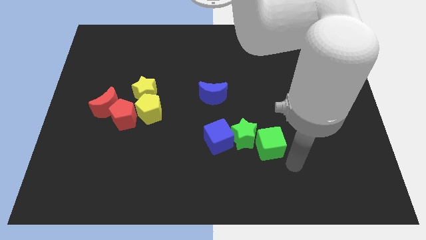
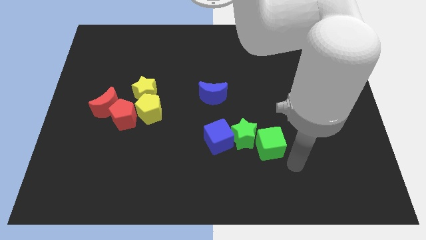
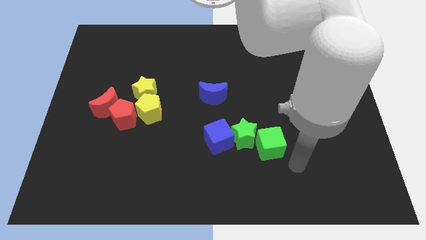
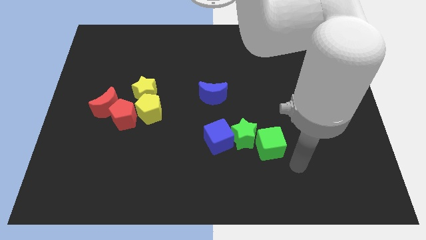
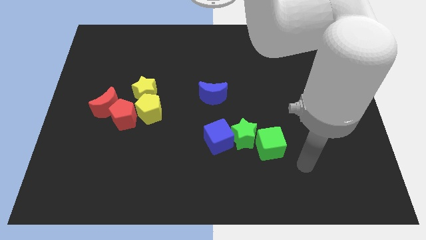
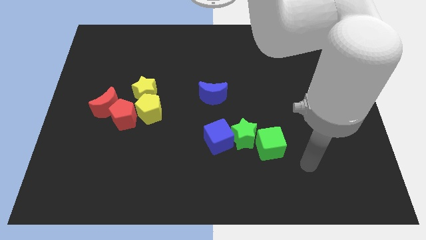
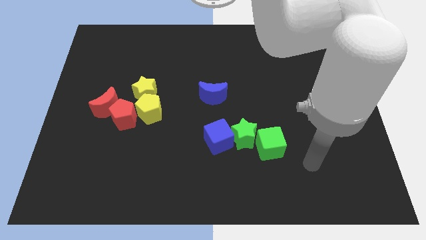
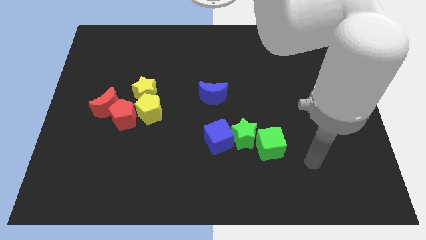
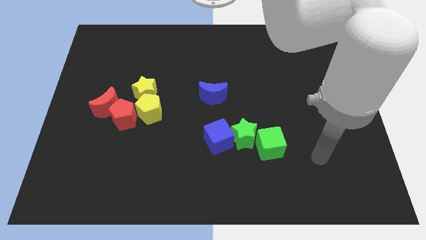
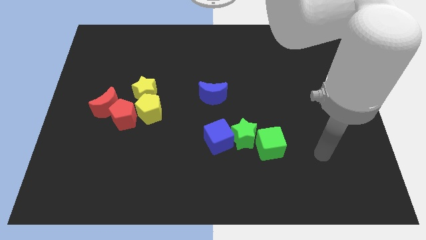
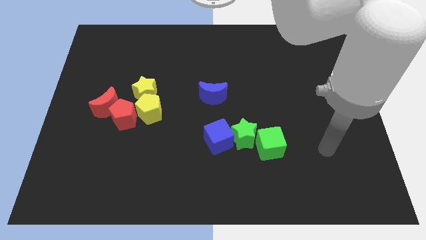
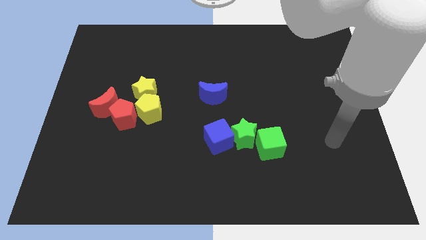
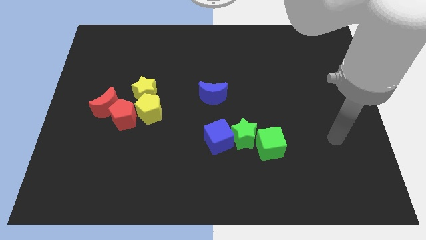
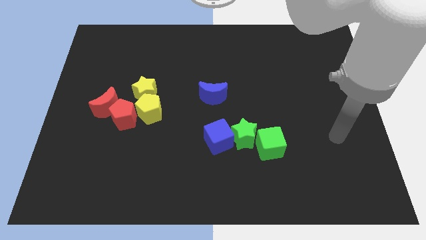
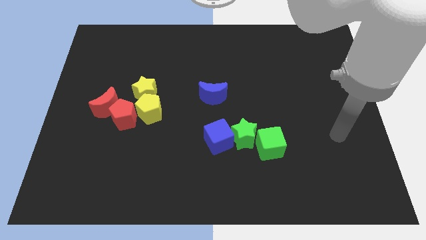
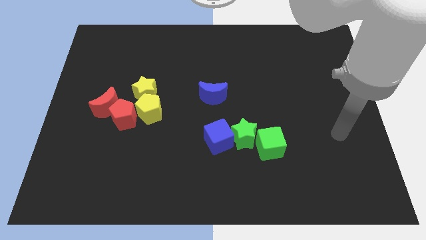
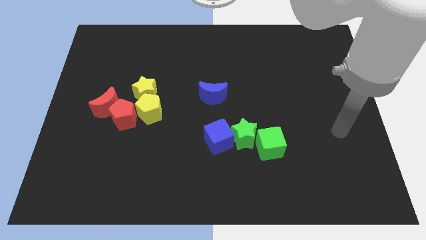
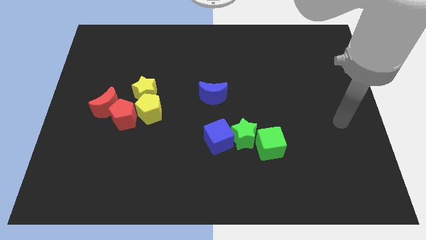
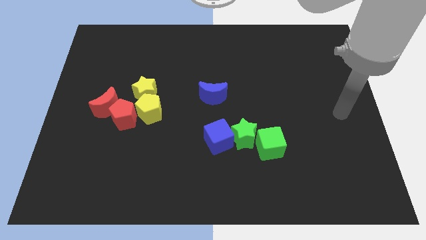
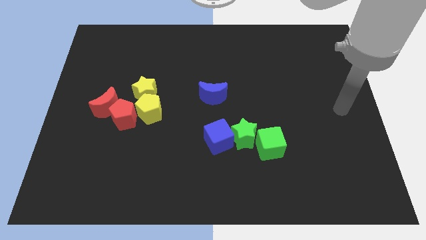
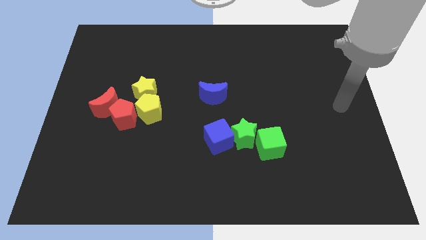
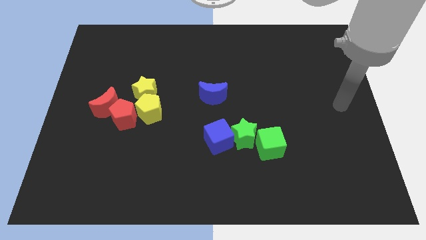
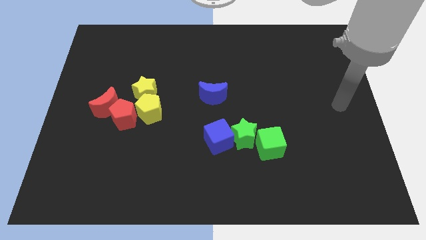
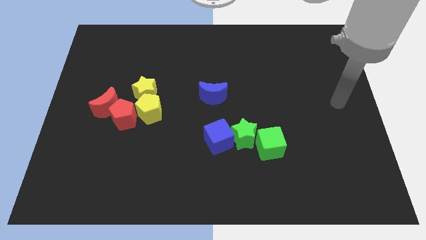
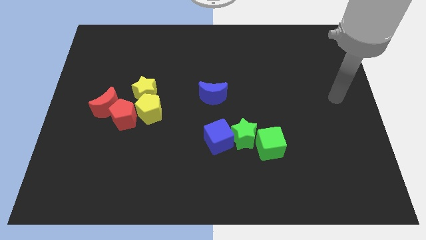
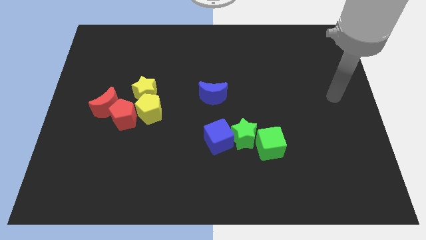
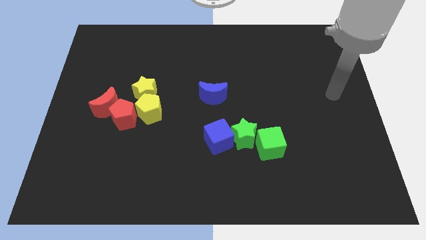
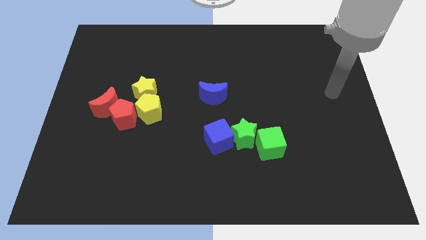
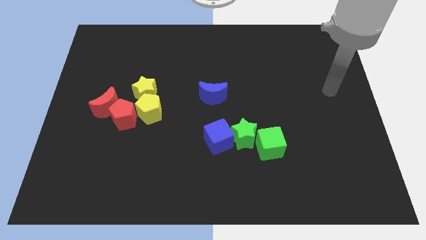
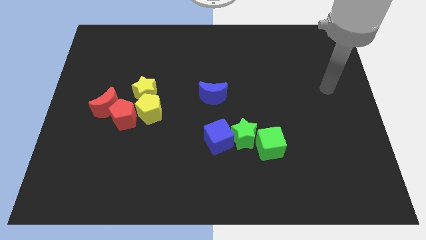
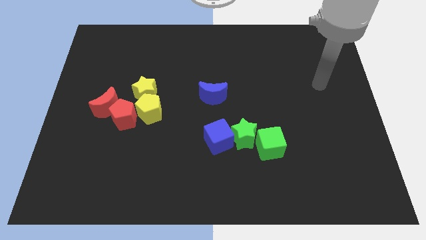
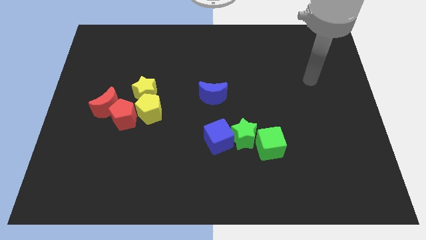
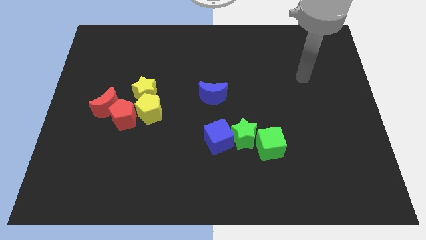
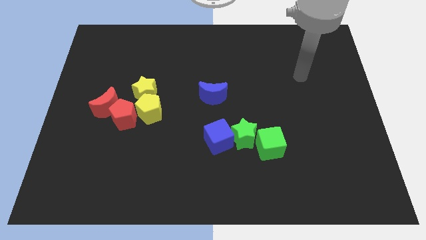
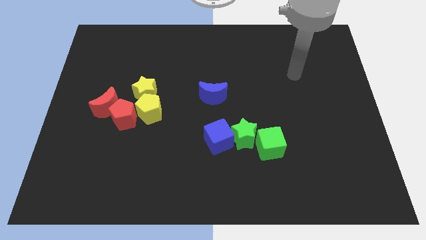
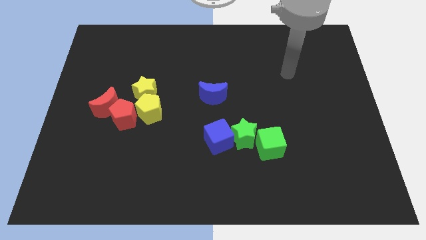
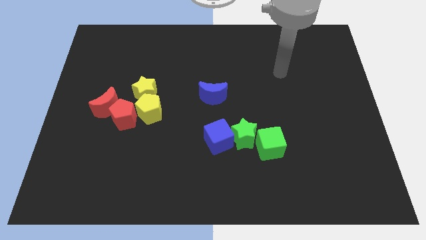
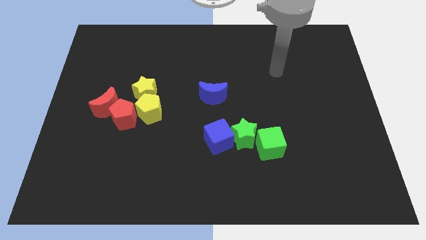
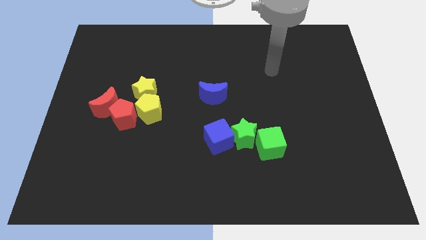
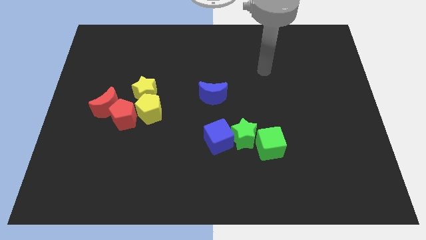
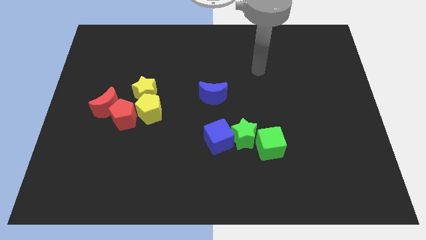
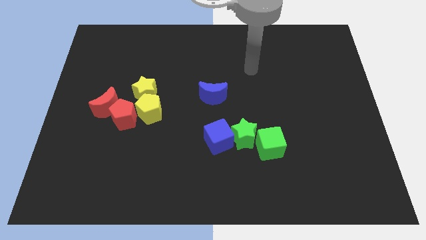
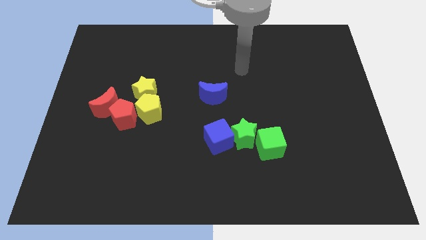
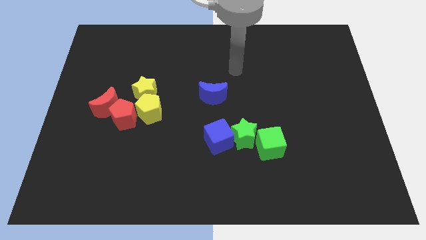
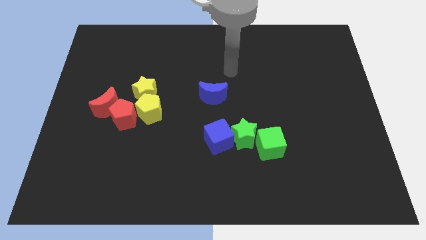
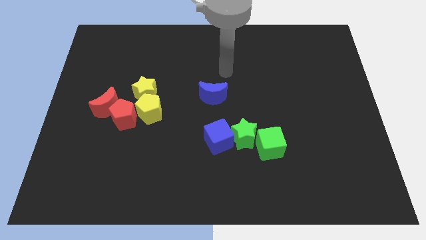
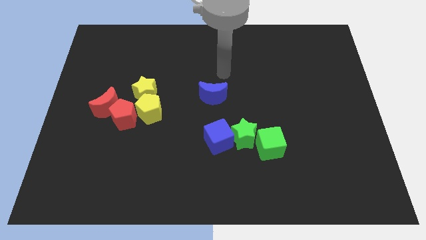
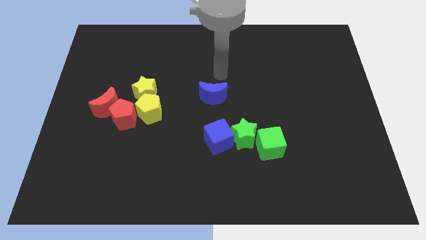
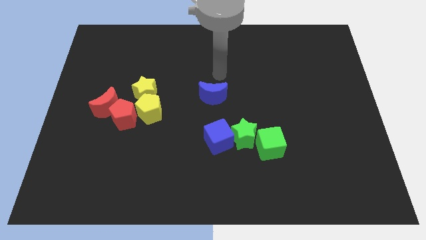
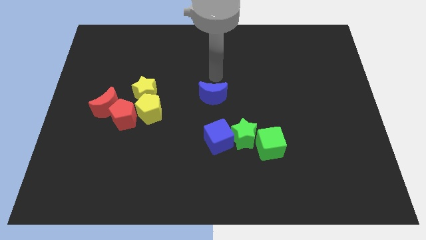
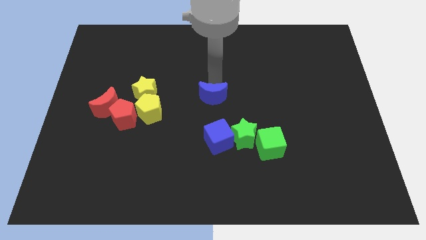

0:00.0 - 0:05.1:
place your arm above the blue crescent

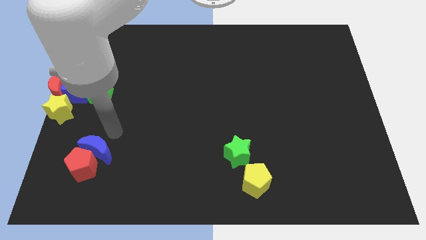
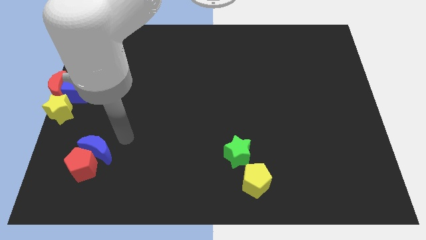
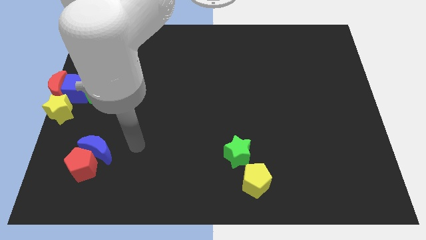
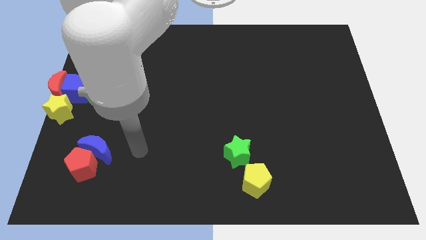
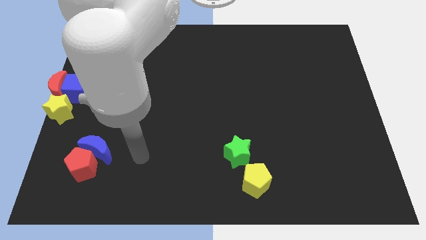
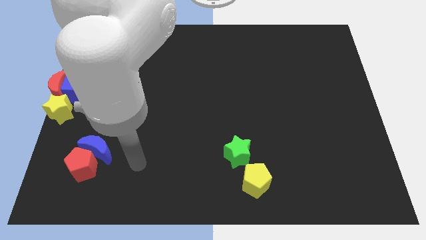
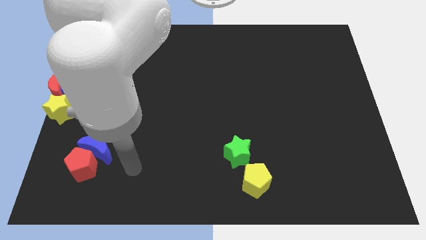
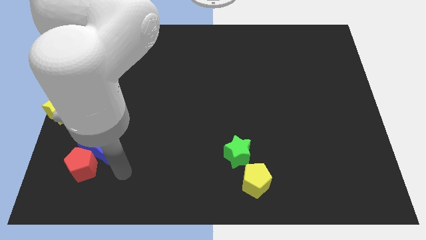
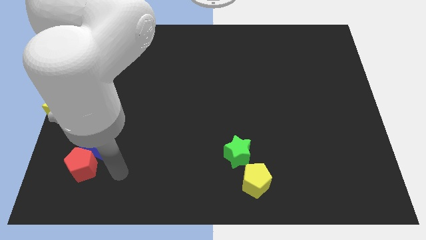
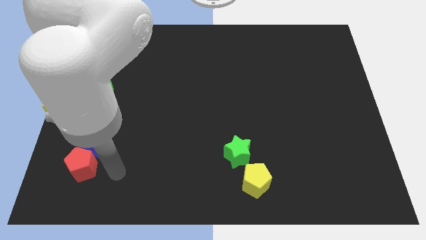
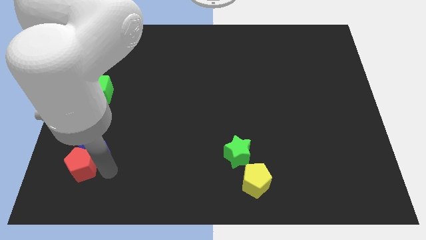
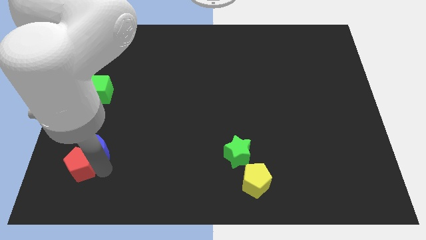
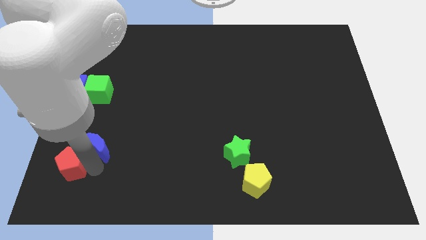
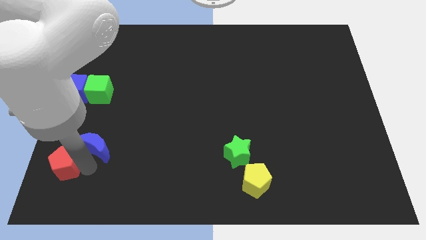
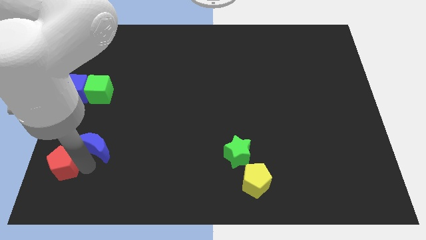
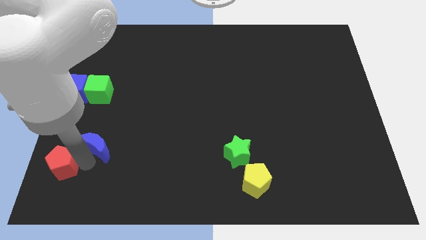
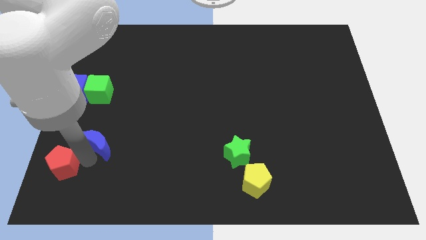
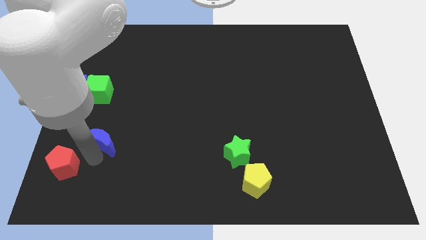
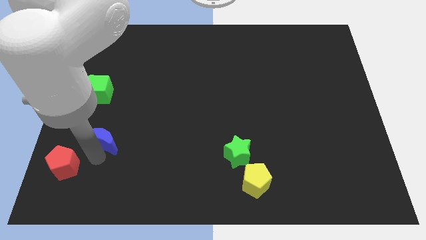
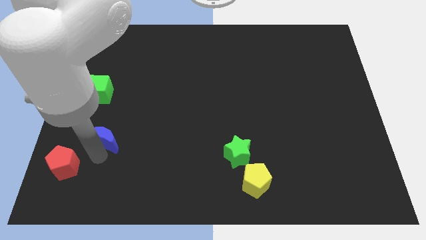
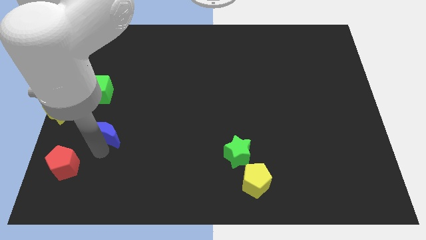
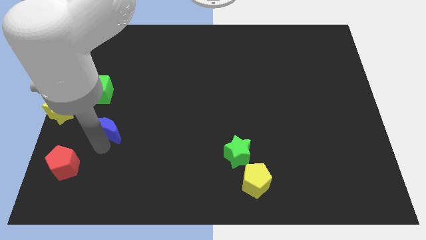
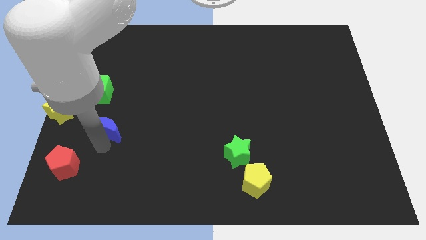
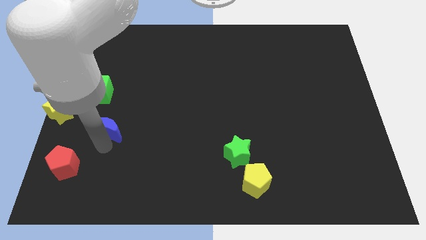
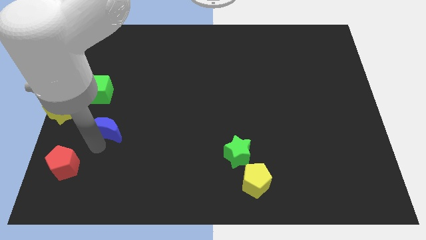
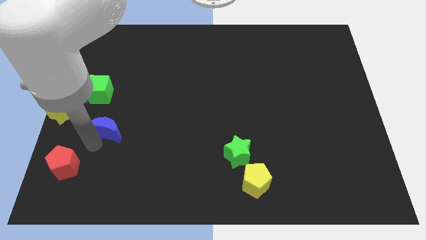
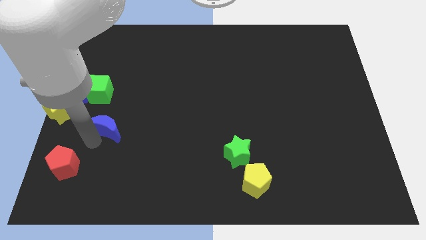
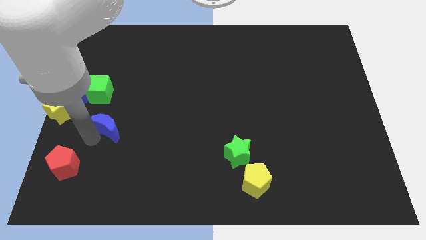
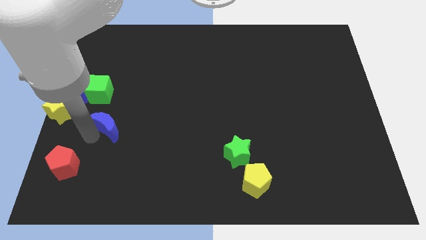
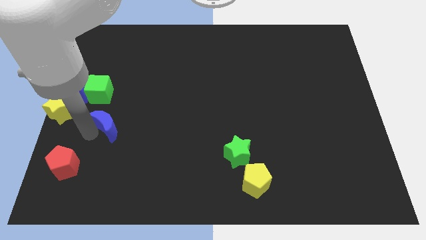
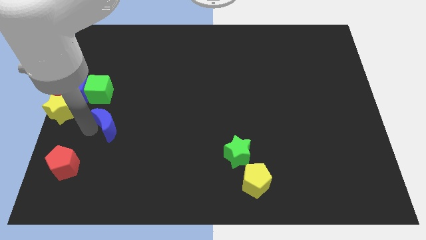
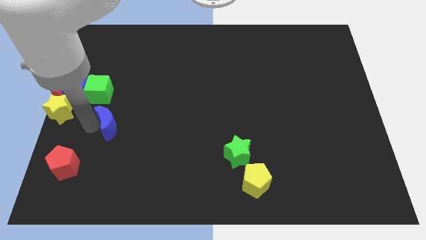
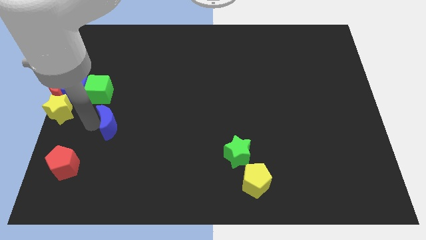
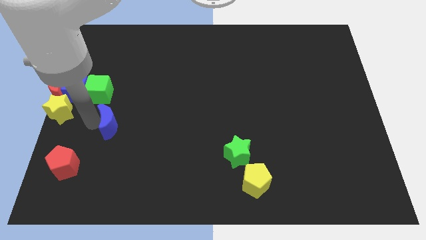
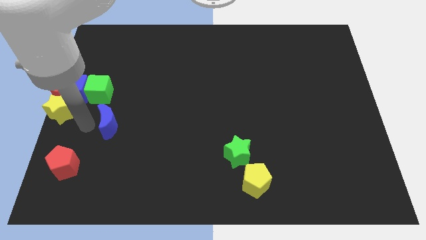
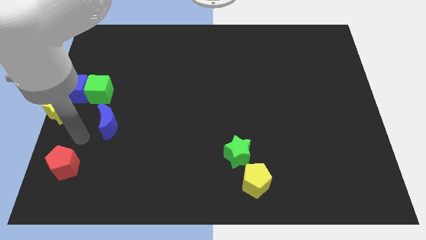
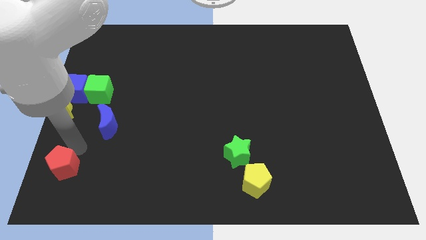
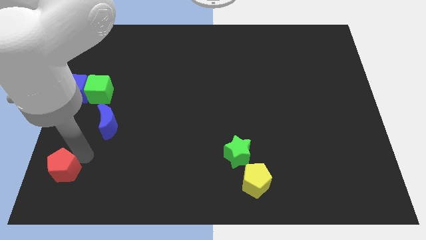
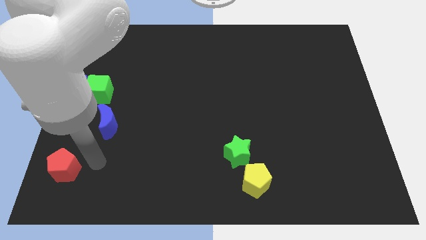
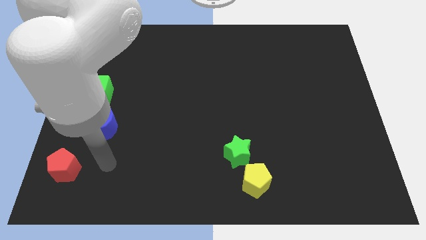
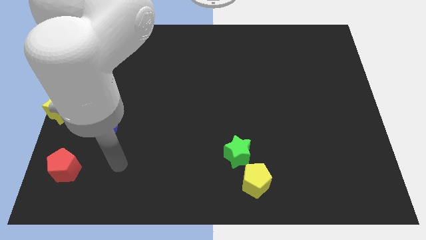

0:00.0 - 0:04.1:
separate blue moon and red pentagon
